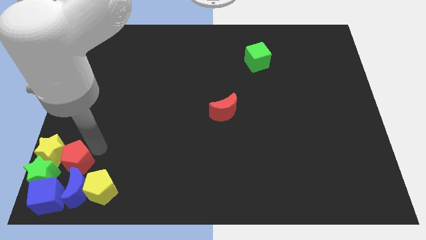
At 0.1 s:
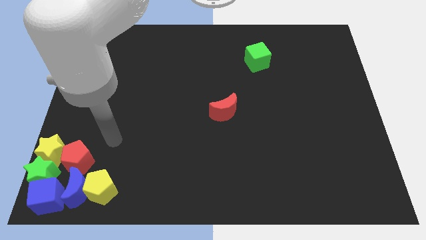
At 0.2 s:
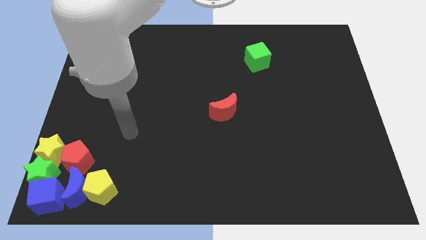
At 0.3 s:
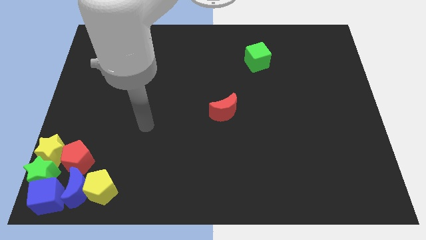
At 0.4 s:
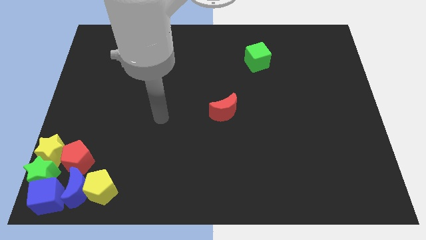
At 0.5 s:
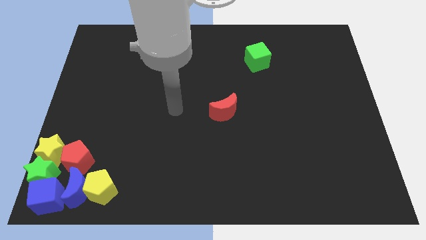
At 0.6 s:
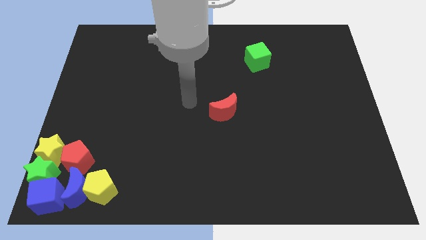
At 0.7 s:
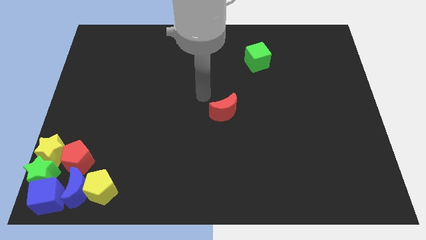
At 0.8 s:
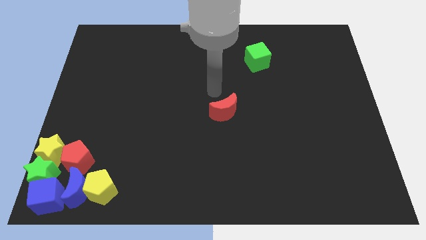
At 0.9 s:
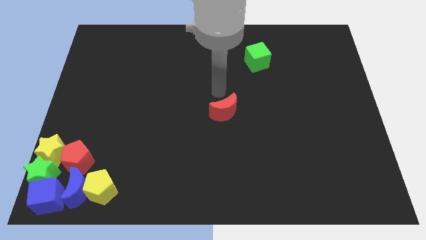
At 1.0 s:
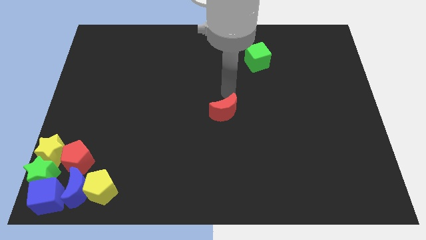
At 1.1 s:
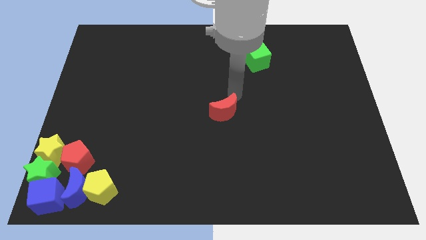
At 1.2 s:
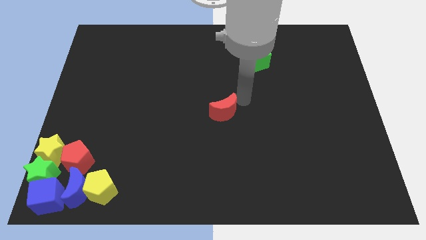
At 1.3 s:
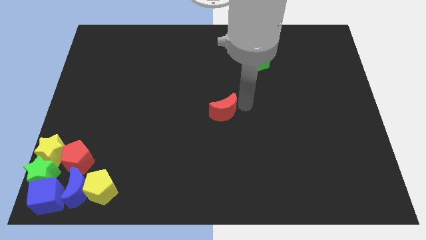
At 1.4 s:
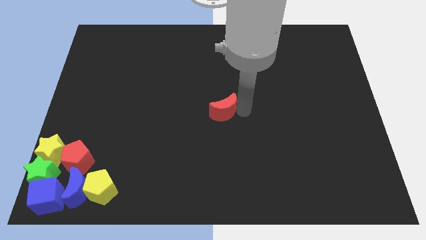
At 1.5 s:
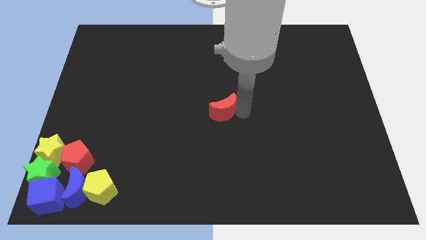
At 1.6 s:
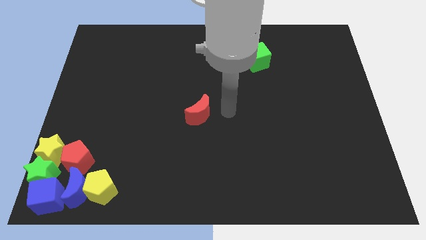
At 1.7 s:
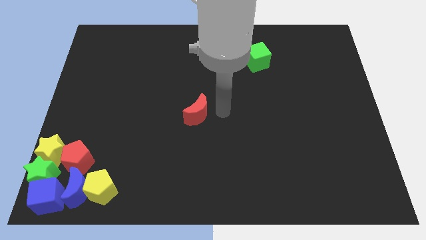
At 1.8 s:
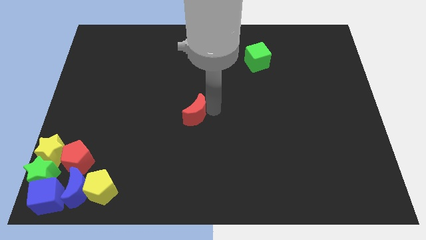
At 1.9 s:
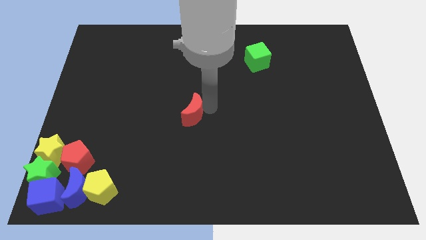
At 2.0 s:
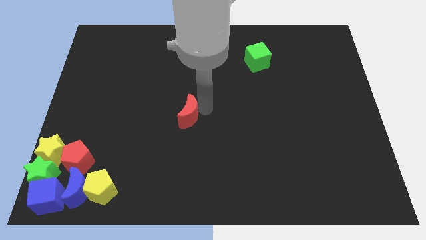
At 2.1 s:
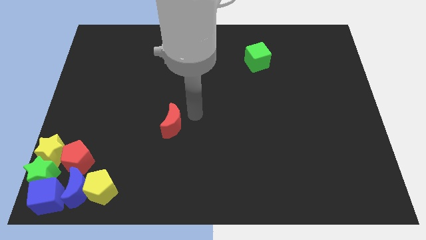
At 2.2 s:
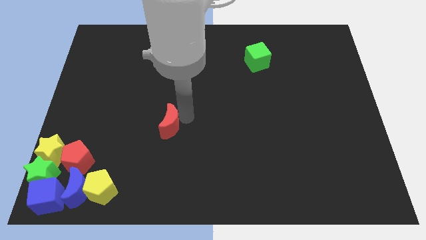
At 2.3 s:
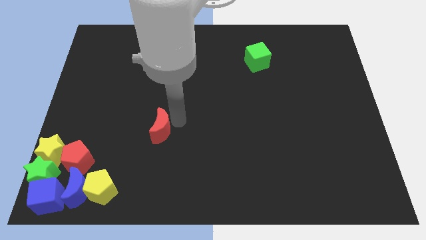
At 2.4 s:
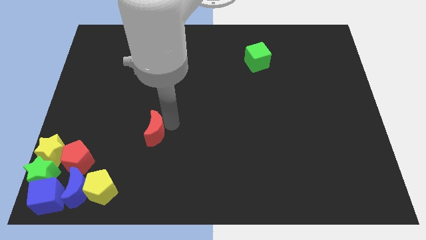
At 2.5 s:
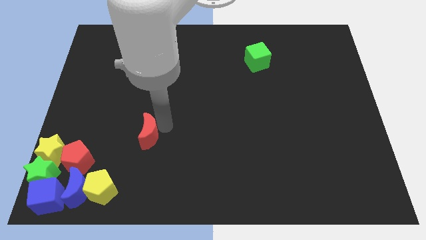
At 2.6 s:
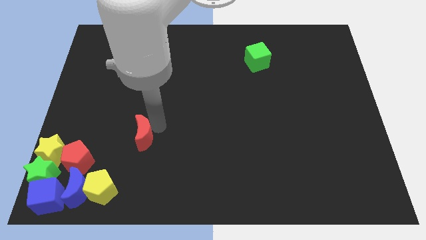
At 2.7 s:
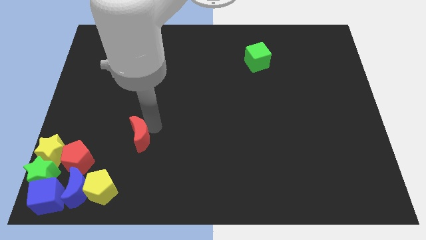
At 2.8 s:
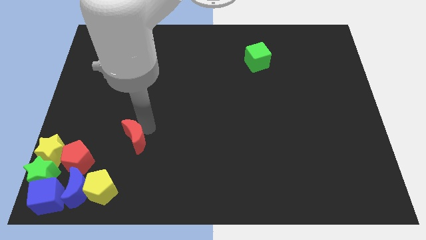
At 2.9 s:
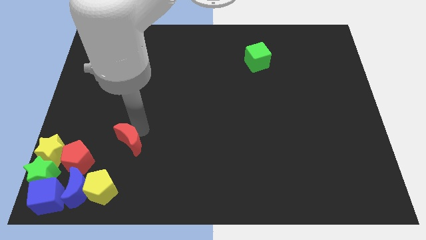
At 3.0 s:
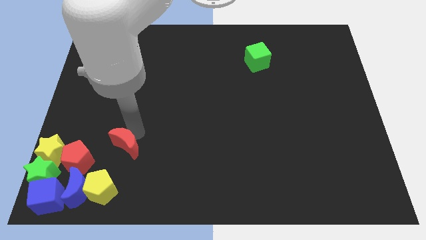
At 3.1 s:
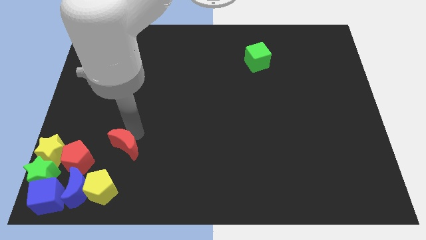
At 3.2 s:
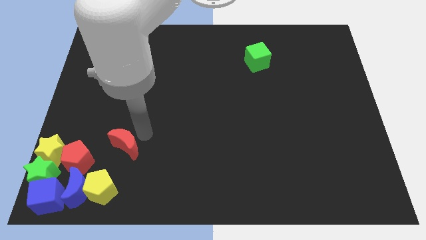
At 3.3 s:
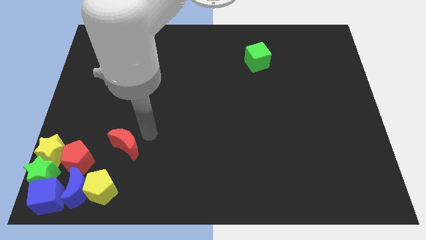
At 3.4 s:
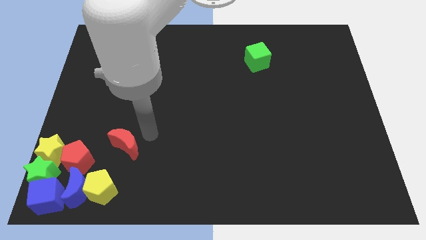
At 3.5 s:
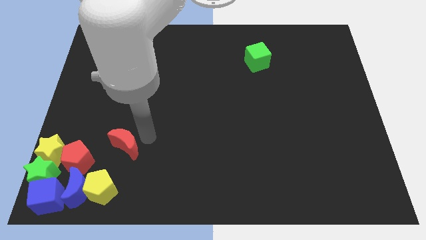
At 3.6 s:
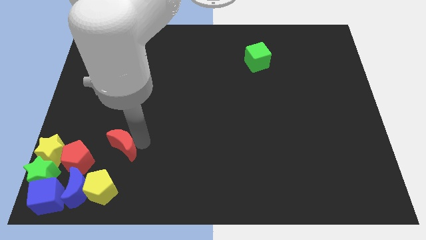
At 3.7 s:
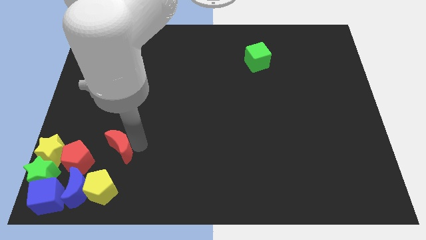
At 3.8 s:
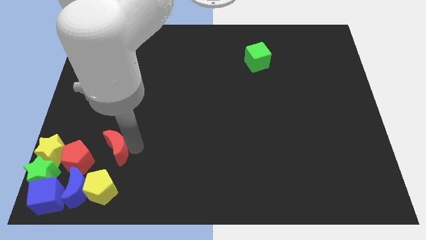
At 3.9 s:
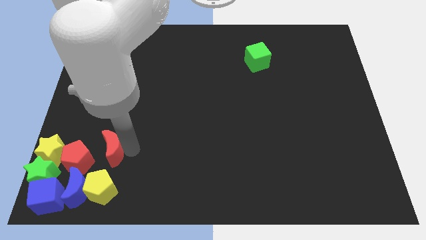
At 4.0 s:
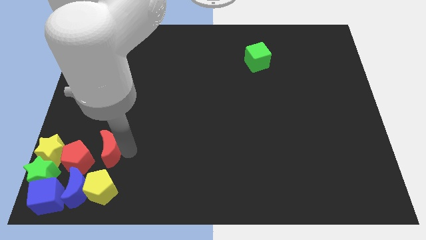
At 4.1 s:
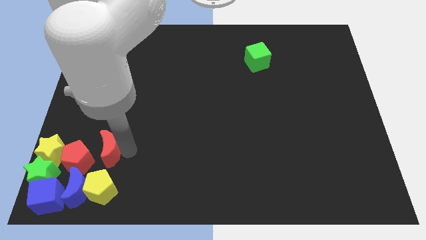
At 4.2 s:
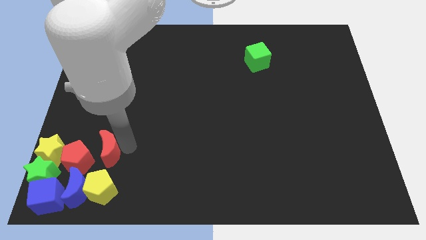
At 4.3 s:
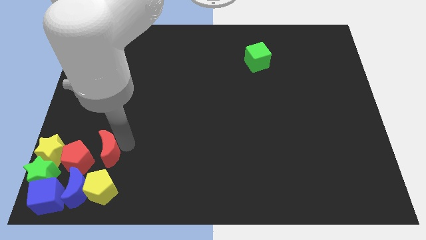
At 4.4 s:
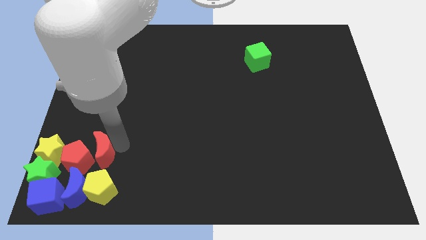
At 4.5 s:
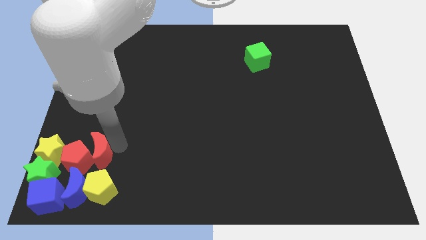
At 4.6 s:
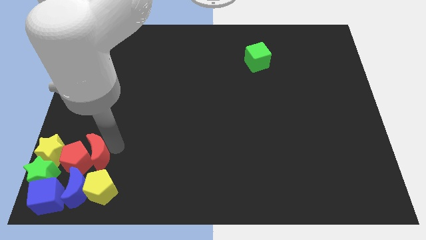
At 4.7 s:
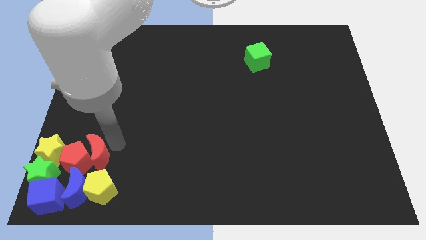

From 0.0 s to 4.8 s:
slide the red crescent into the right side of the red pentagon

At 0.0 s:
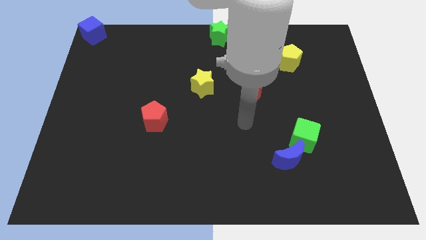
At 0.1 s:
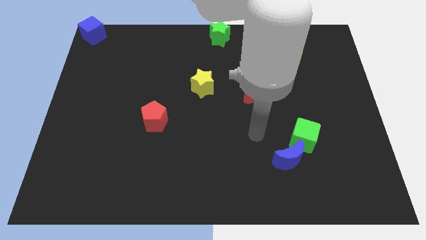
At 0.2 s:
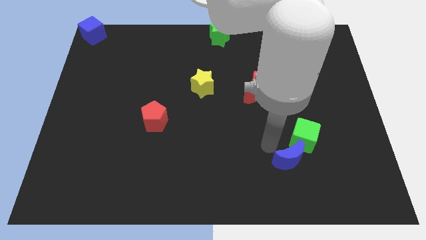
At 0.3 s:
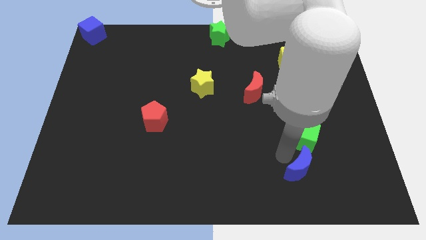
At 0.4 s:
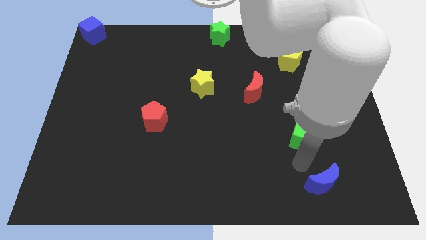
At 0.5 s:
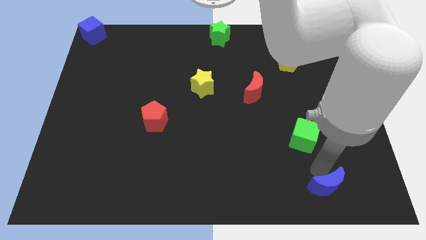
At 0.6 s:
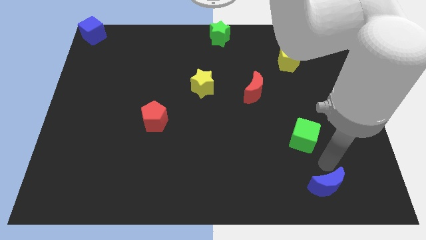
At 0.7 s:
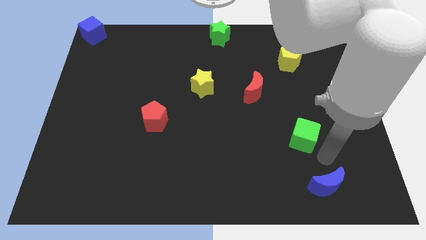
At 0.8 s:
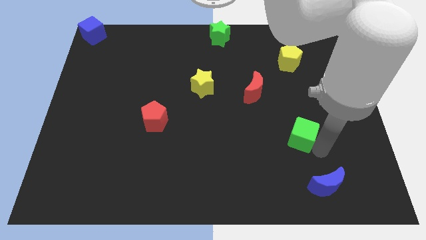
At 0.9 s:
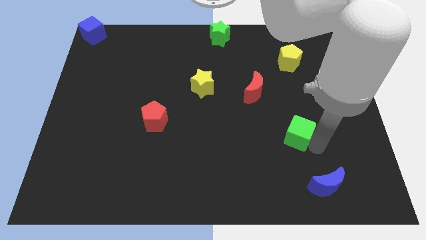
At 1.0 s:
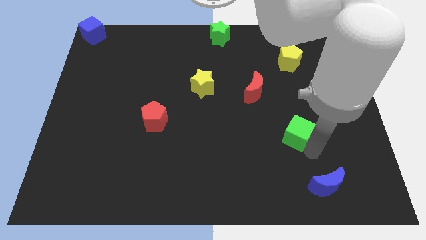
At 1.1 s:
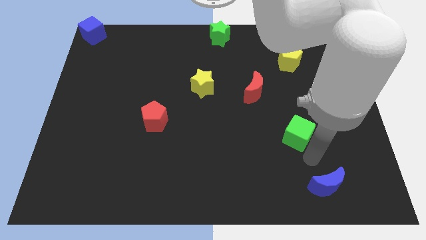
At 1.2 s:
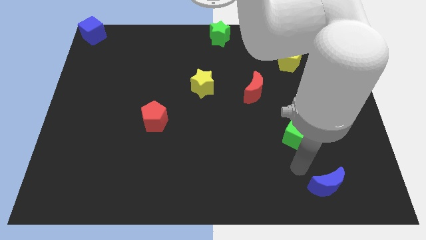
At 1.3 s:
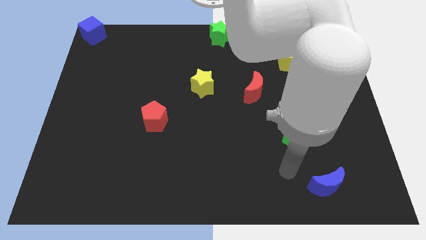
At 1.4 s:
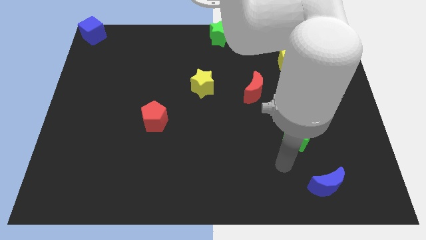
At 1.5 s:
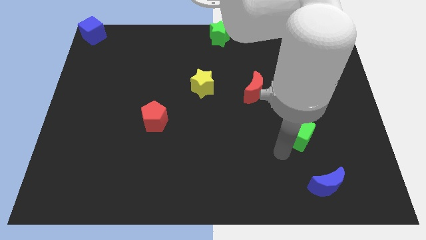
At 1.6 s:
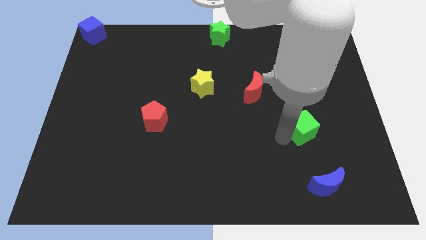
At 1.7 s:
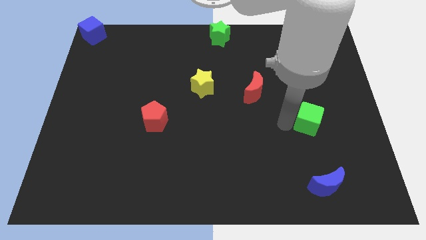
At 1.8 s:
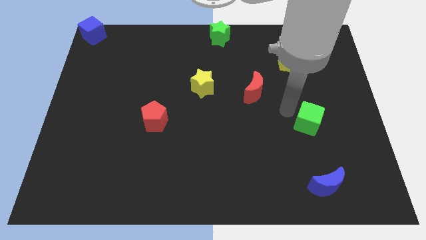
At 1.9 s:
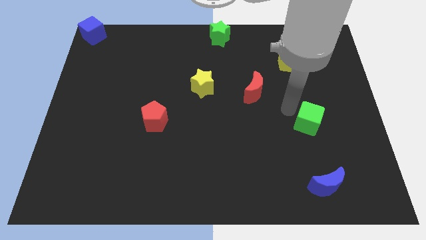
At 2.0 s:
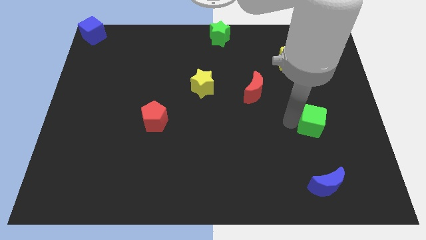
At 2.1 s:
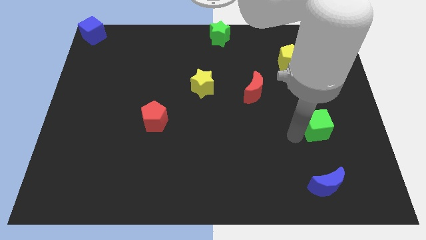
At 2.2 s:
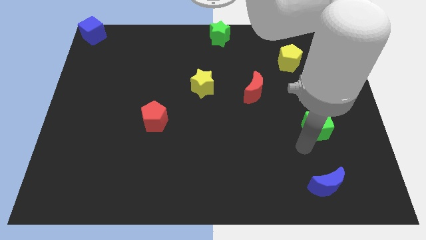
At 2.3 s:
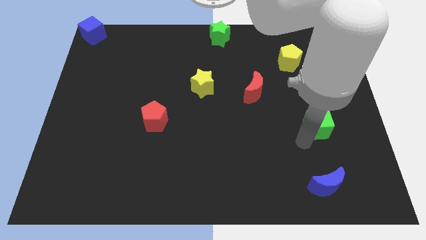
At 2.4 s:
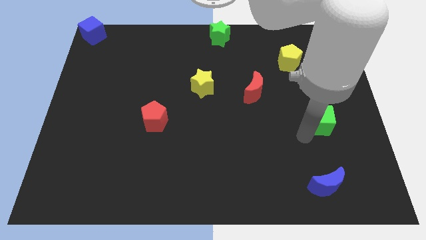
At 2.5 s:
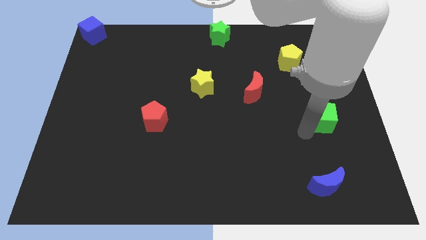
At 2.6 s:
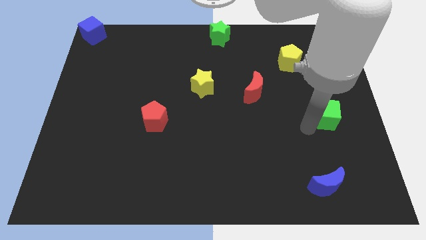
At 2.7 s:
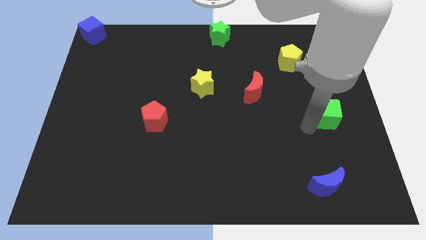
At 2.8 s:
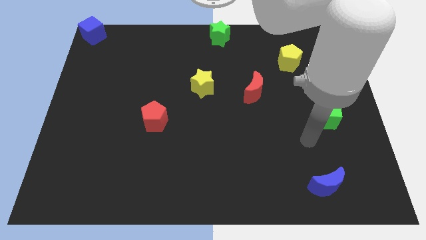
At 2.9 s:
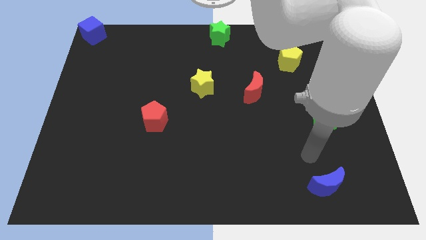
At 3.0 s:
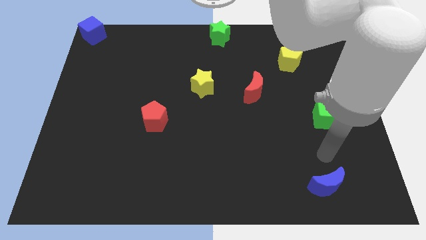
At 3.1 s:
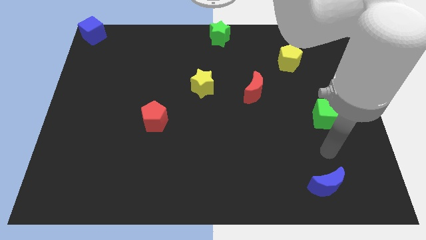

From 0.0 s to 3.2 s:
put the green cube vertically above the blue crescent

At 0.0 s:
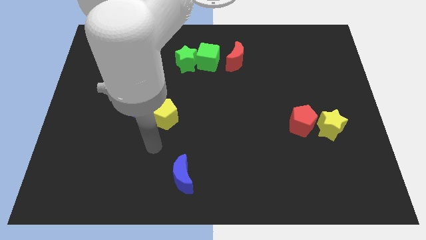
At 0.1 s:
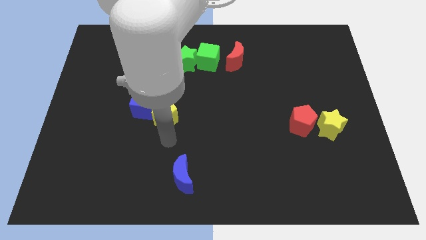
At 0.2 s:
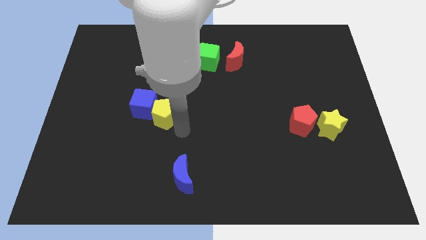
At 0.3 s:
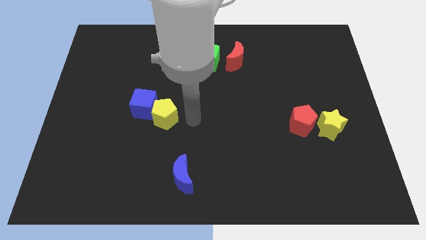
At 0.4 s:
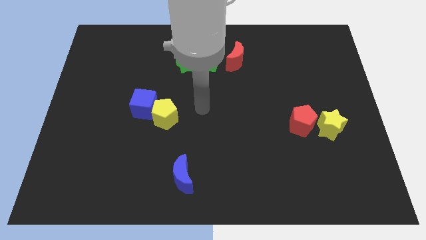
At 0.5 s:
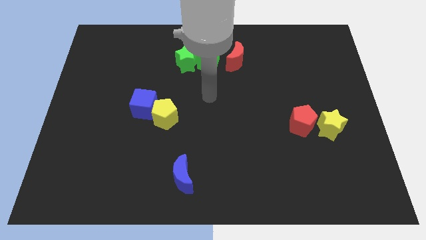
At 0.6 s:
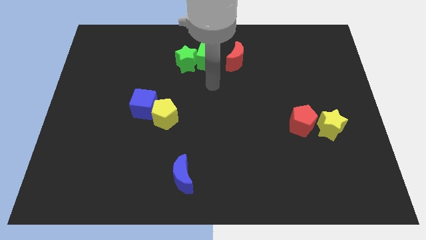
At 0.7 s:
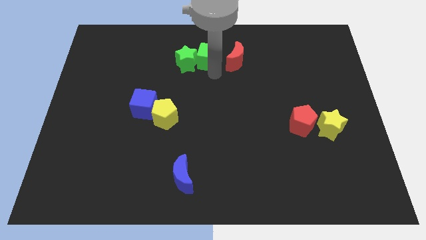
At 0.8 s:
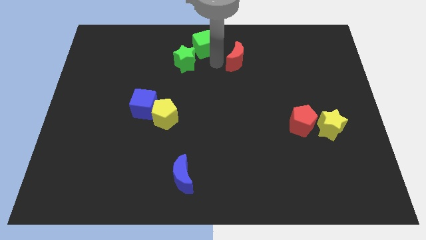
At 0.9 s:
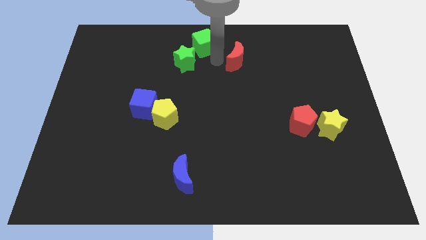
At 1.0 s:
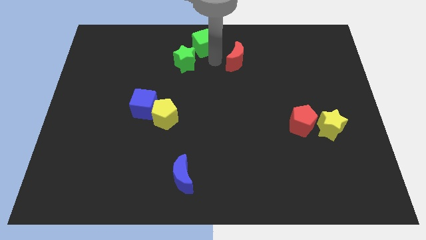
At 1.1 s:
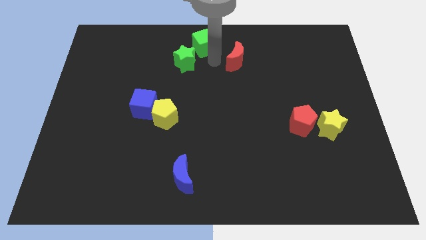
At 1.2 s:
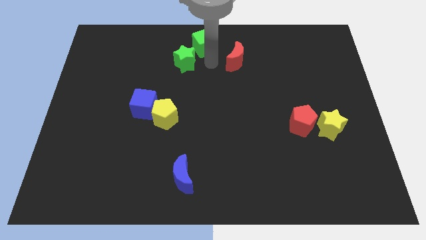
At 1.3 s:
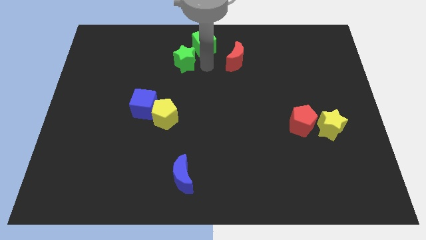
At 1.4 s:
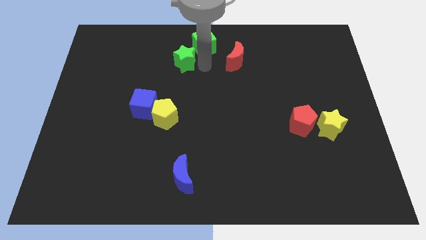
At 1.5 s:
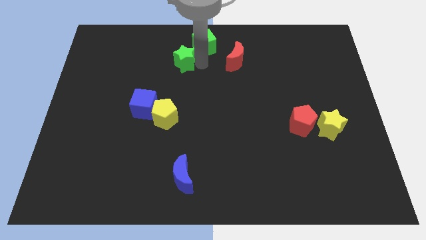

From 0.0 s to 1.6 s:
separate the green cube from the green star
